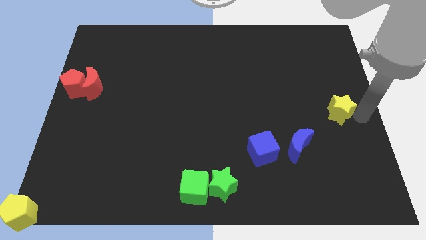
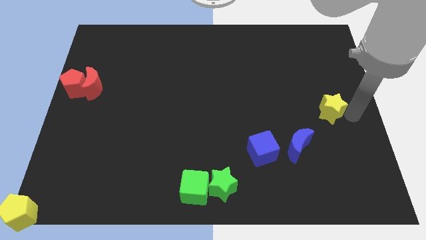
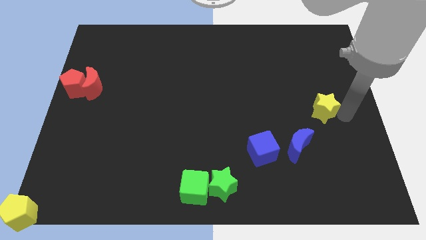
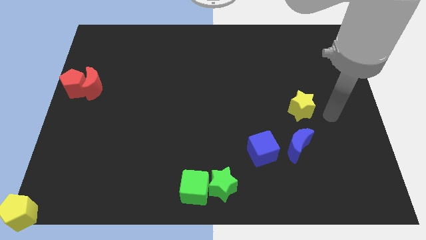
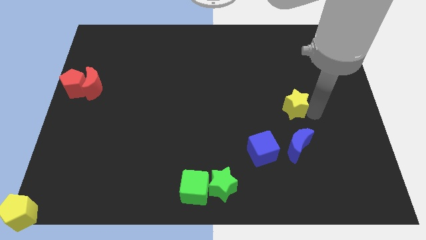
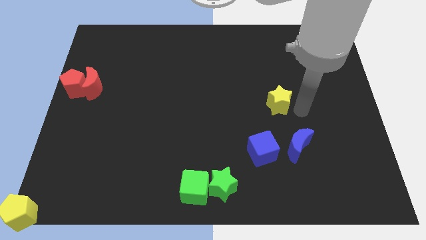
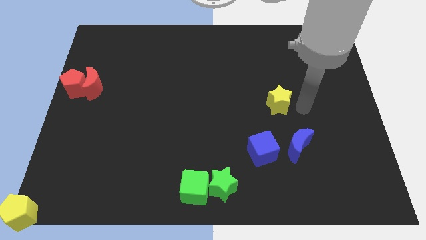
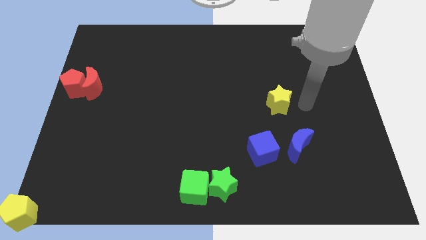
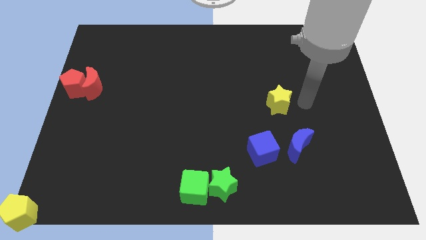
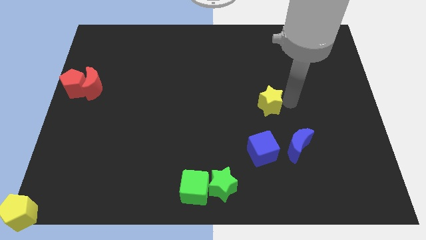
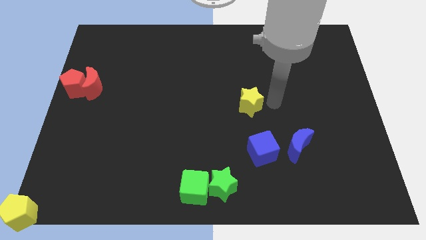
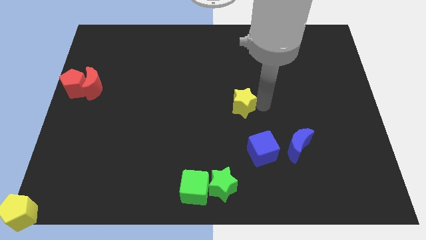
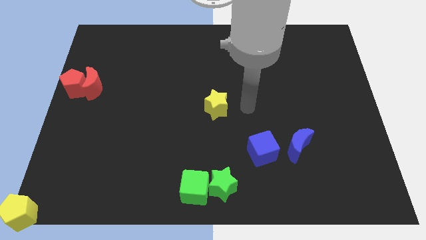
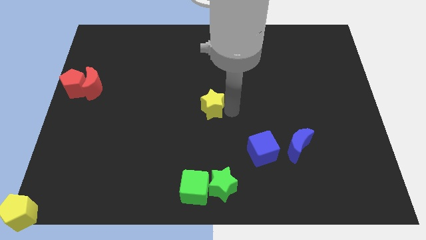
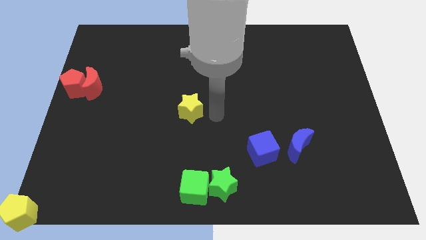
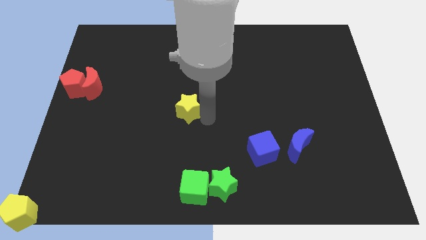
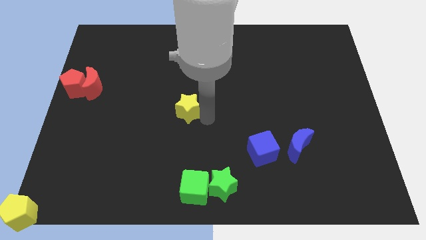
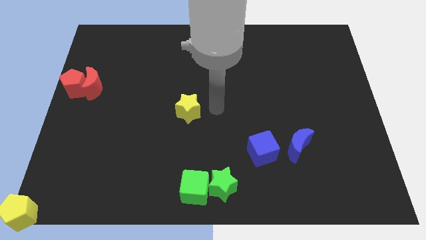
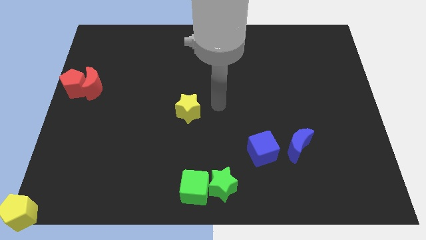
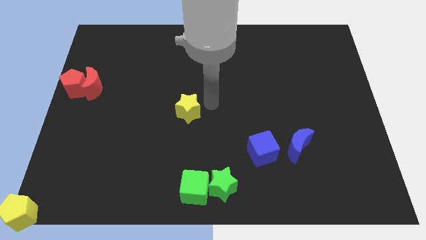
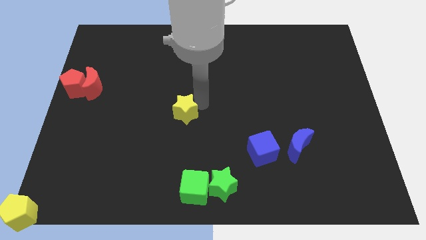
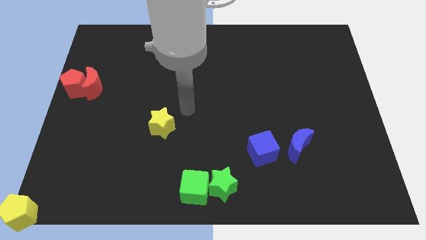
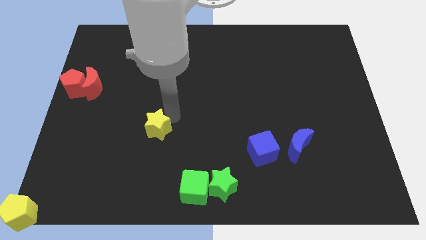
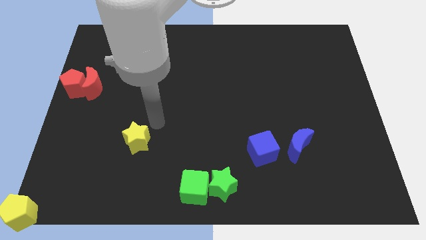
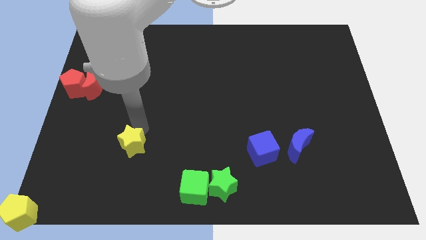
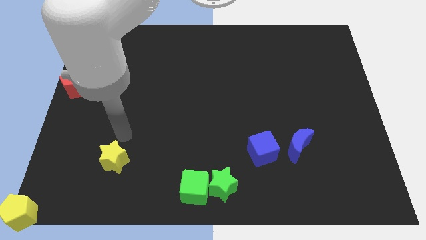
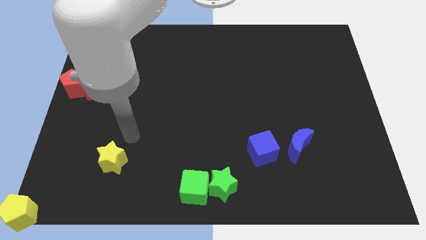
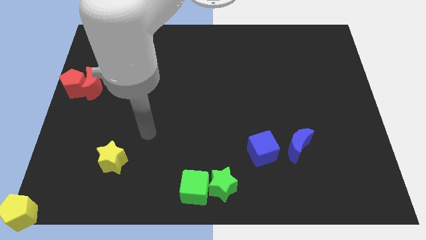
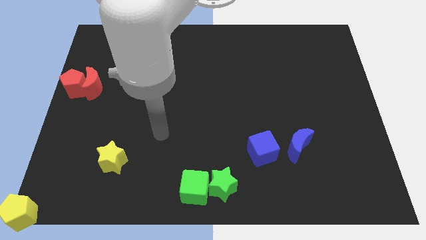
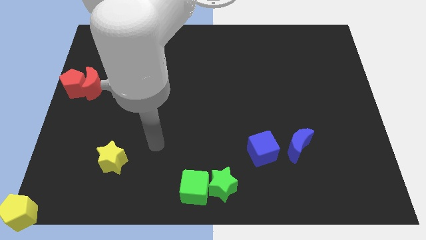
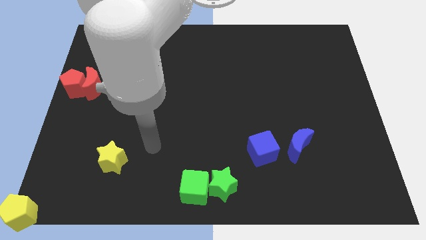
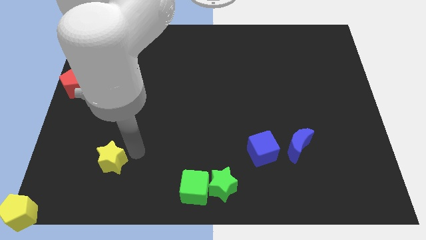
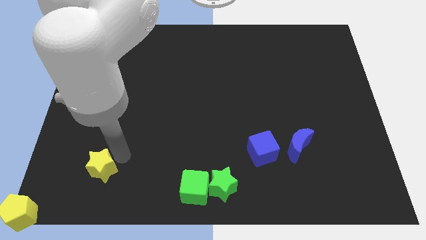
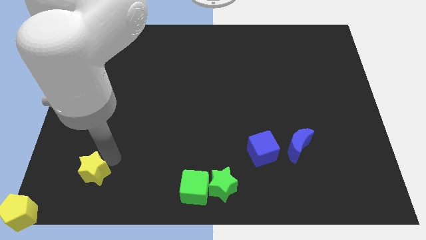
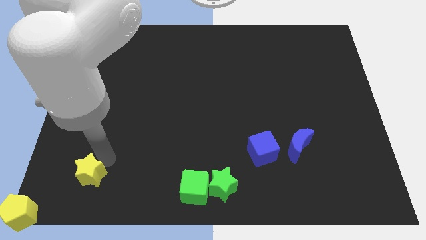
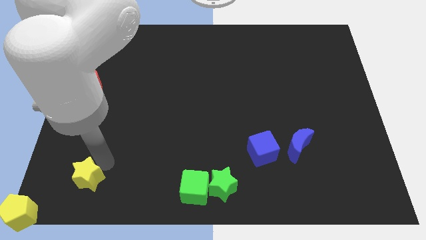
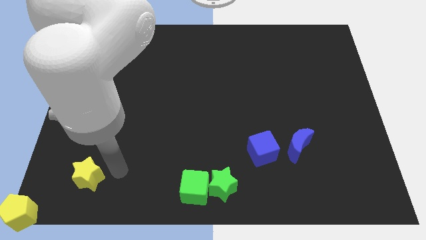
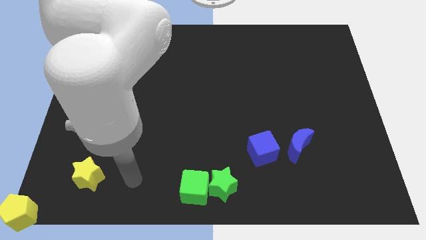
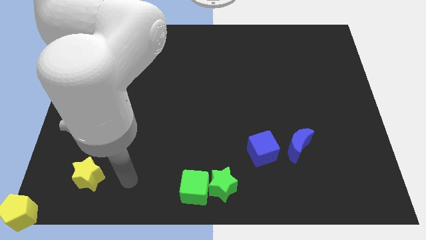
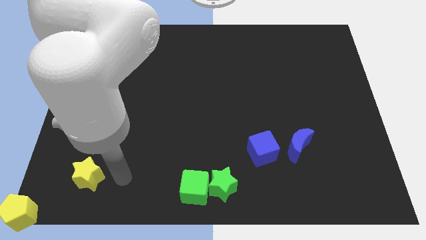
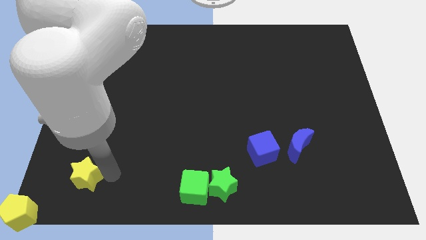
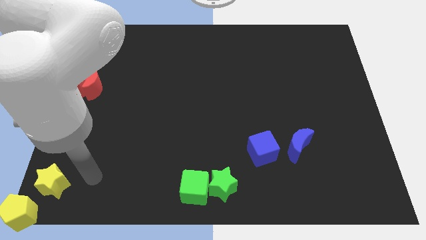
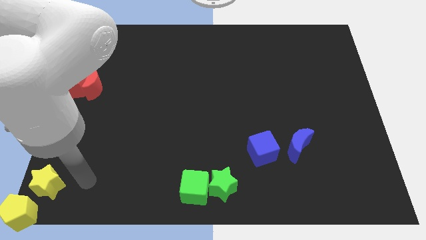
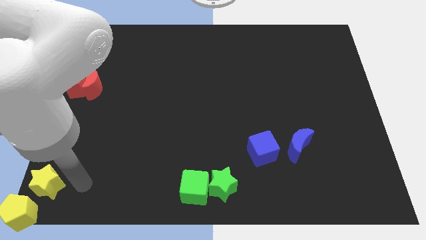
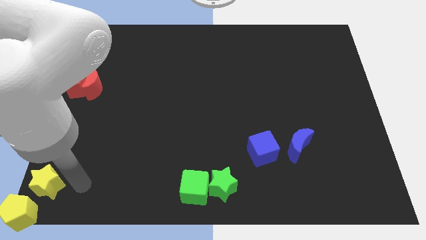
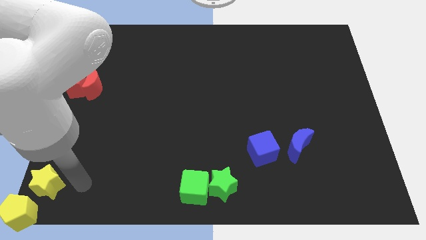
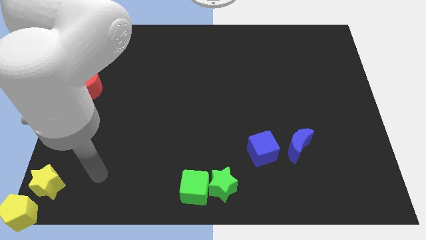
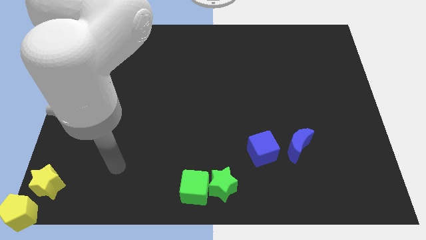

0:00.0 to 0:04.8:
place the yellow star diagonally top right to yellow pentagon

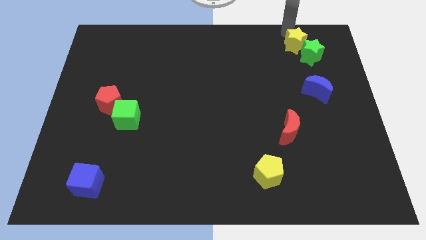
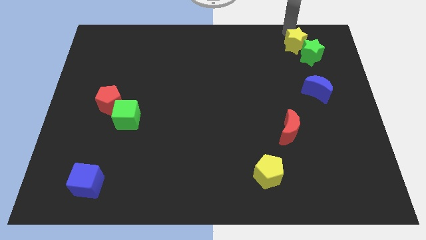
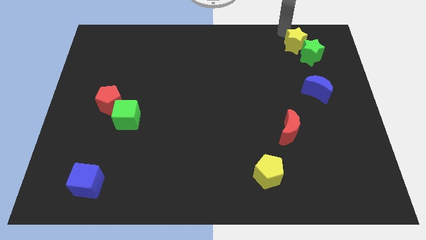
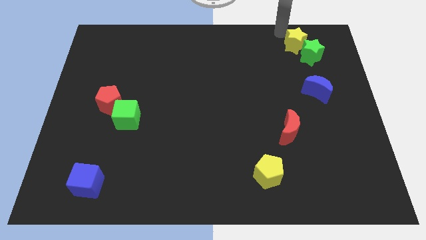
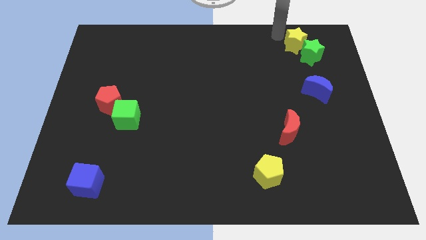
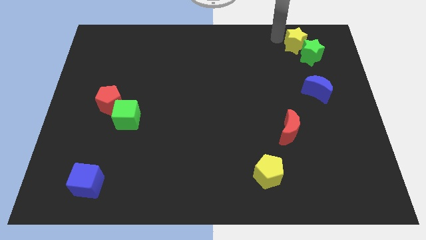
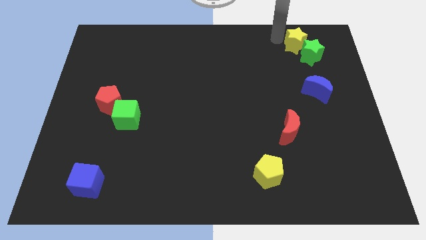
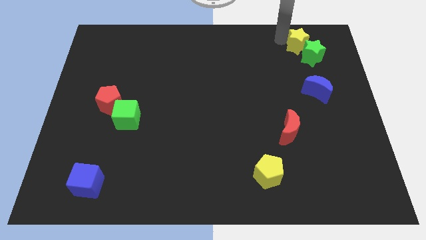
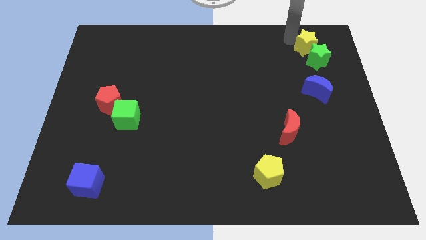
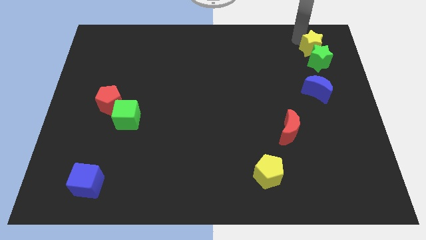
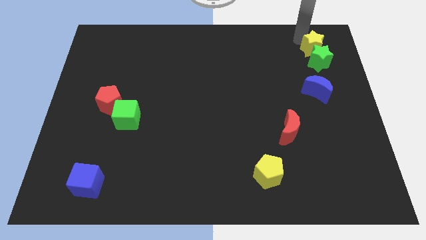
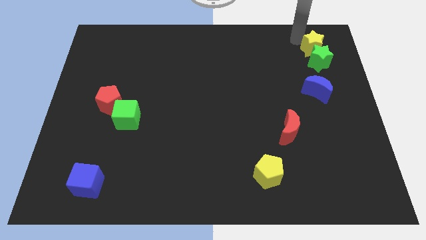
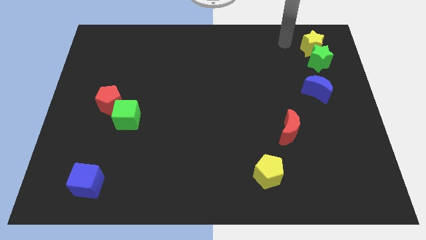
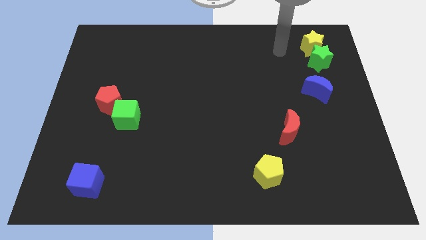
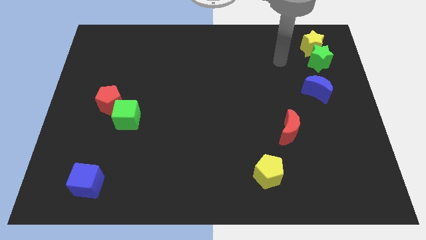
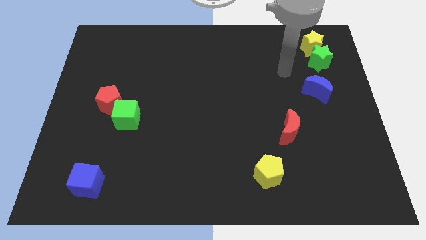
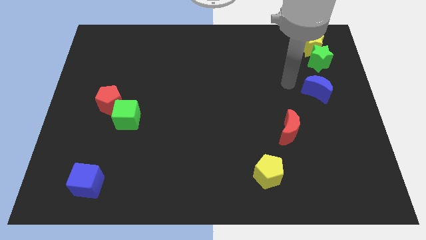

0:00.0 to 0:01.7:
place the yellow star above the green star

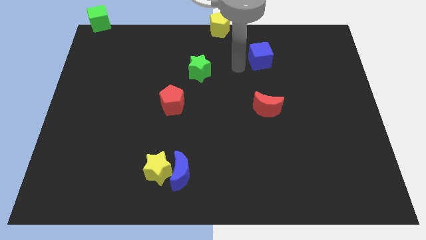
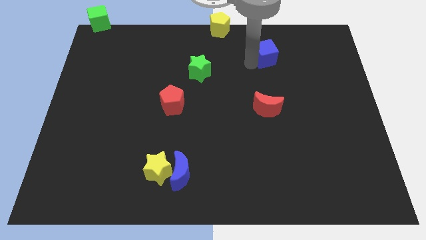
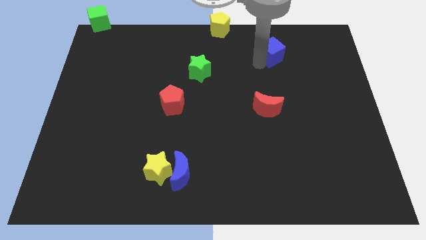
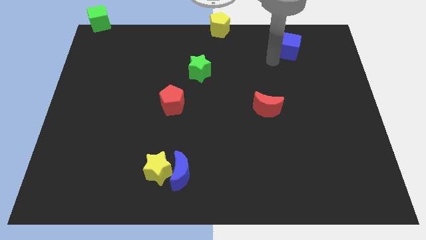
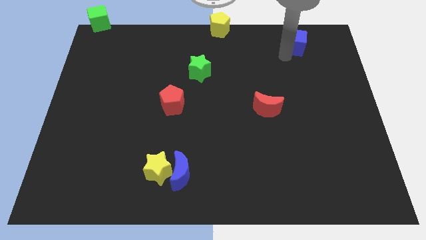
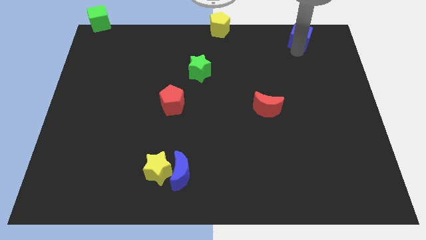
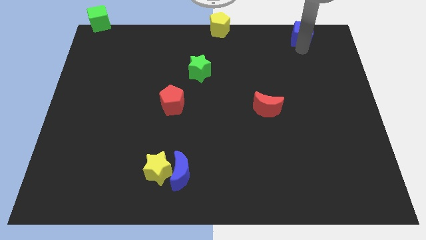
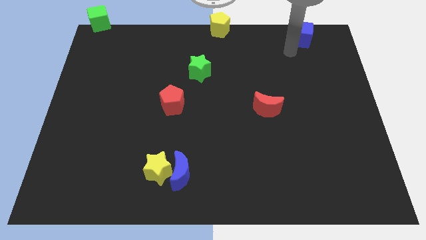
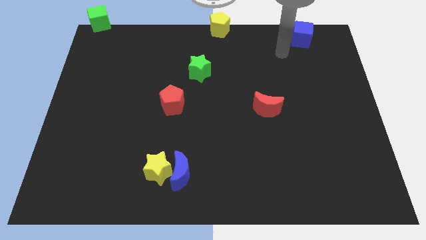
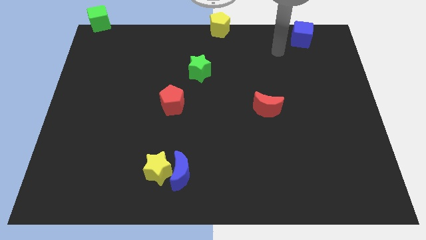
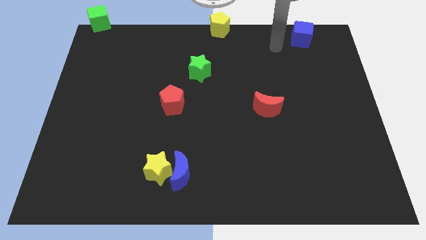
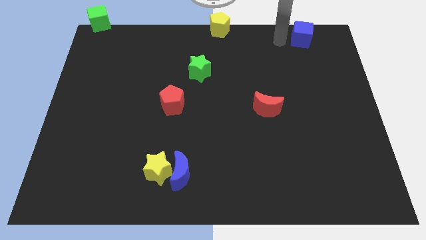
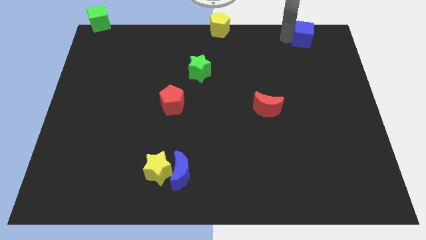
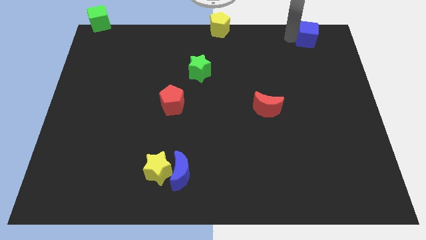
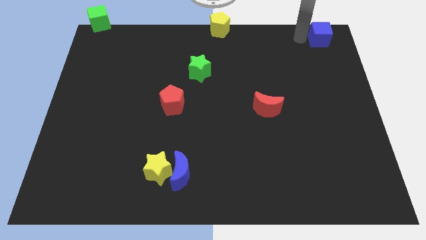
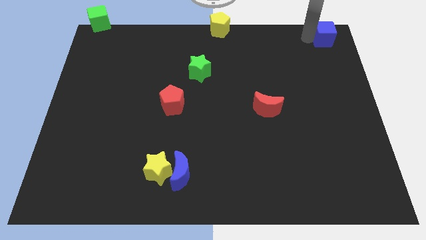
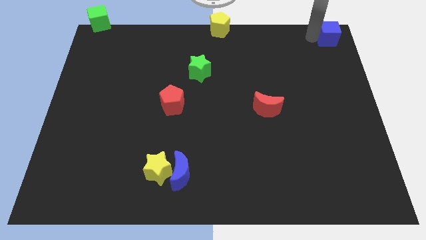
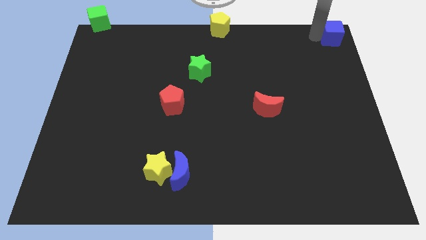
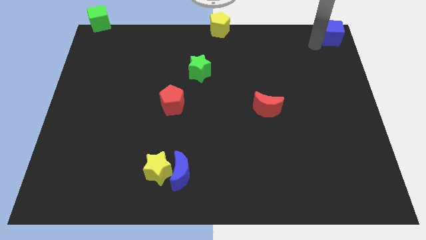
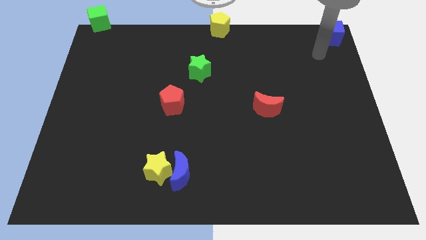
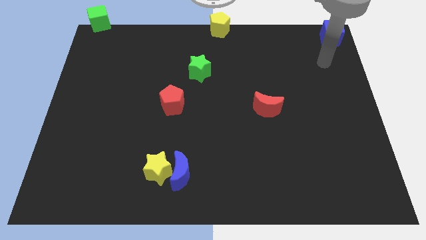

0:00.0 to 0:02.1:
drag the blue cube to the top right of the board
